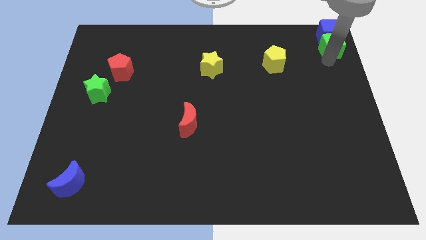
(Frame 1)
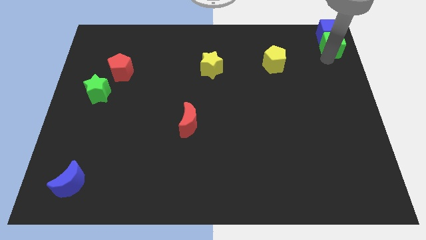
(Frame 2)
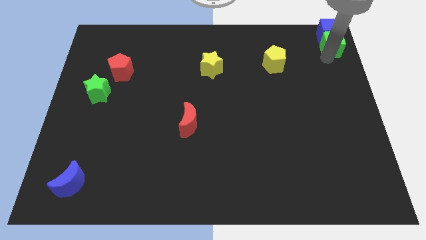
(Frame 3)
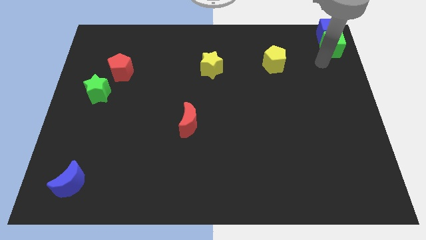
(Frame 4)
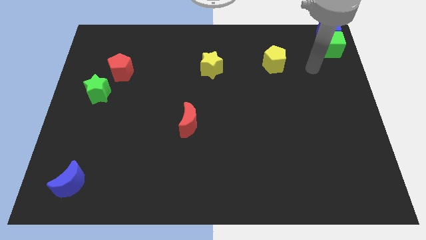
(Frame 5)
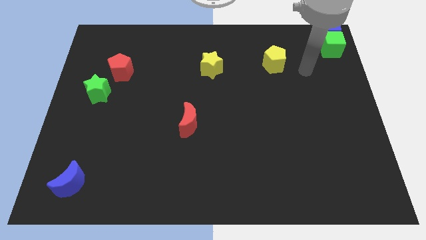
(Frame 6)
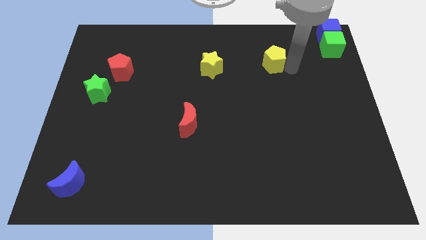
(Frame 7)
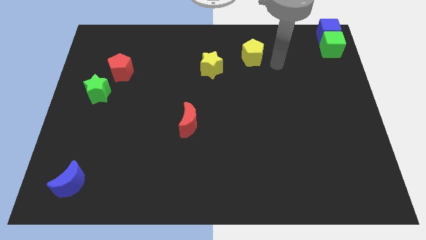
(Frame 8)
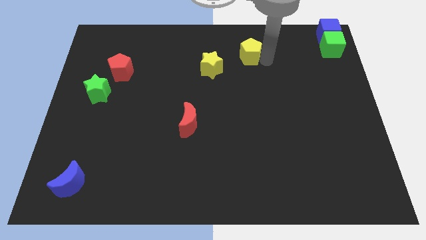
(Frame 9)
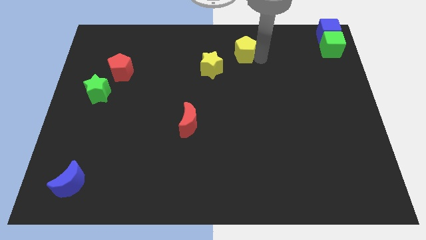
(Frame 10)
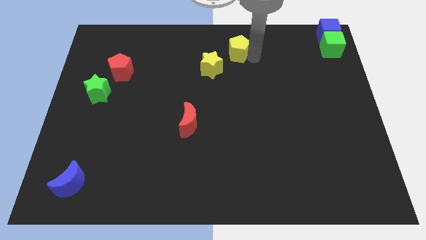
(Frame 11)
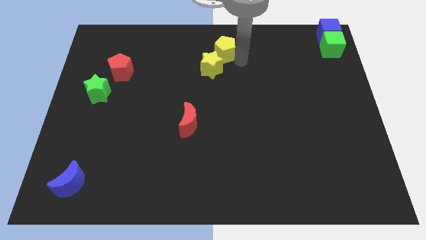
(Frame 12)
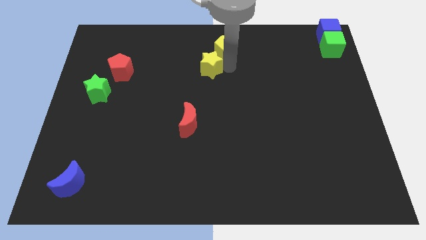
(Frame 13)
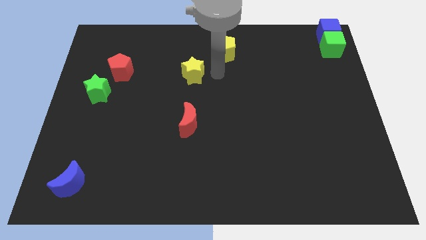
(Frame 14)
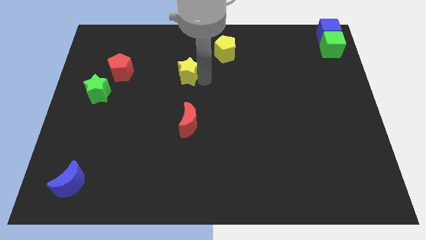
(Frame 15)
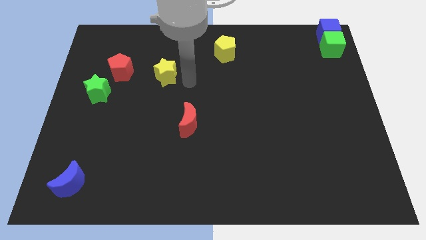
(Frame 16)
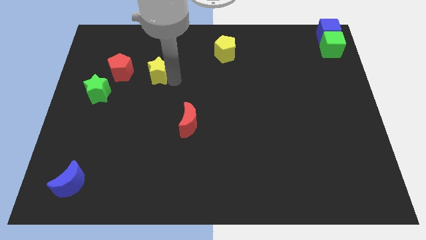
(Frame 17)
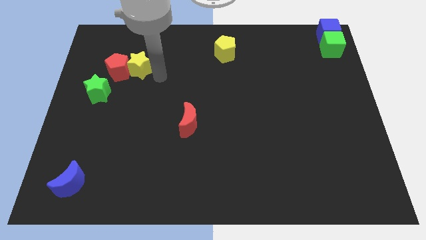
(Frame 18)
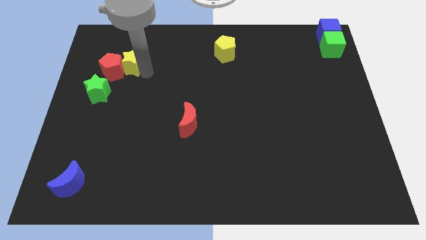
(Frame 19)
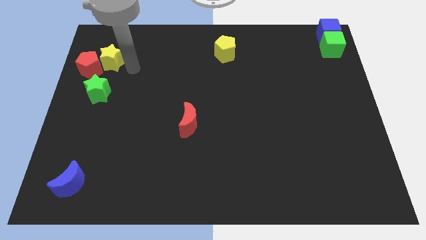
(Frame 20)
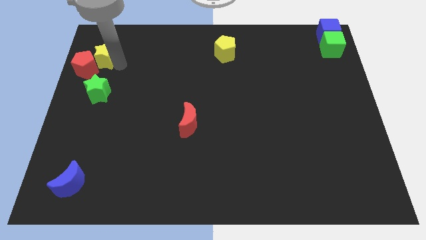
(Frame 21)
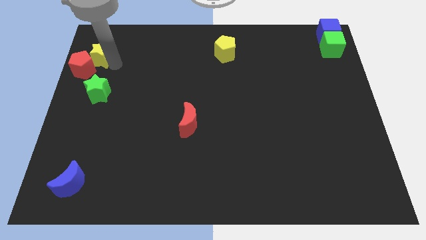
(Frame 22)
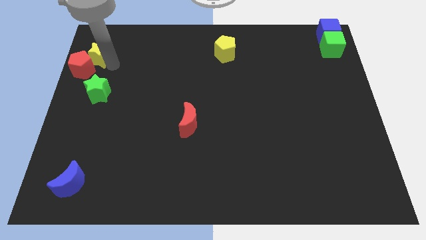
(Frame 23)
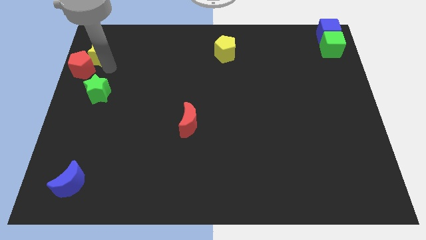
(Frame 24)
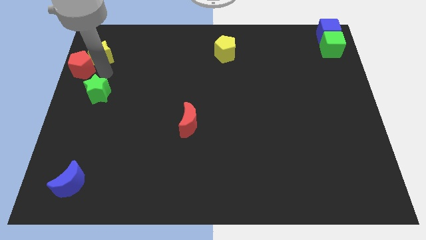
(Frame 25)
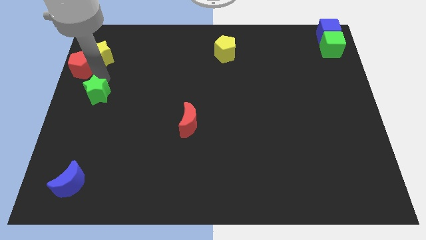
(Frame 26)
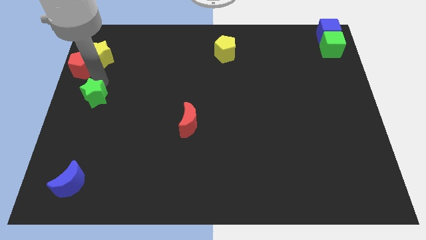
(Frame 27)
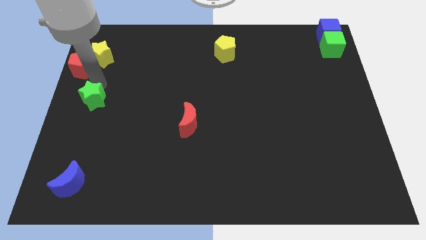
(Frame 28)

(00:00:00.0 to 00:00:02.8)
move the yellow star into the red pentagon

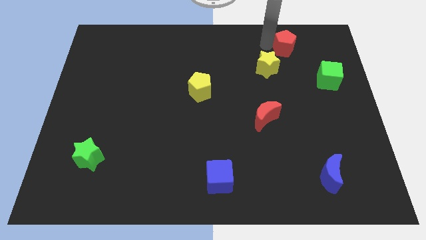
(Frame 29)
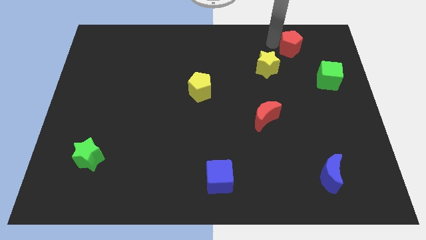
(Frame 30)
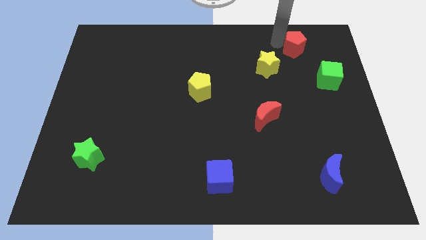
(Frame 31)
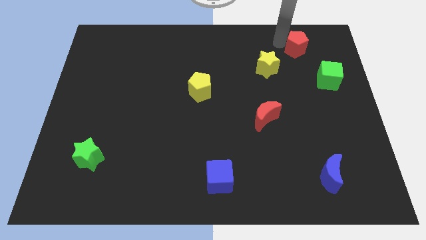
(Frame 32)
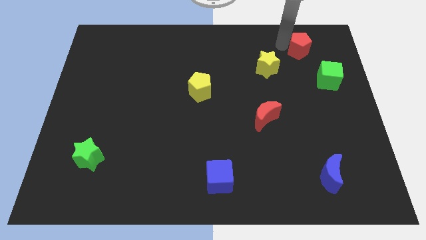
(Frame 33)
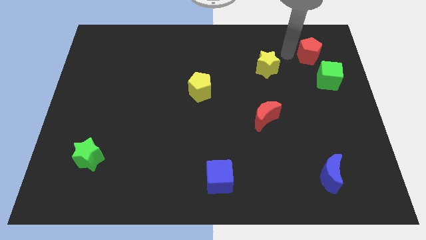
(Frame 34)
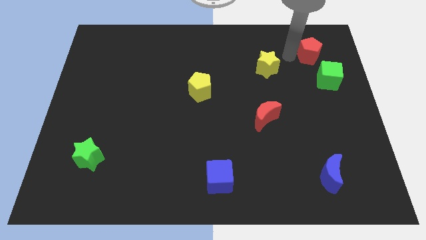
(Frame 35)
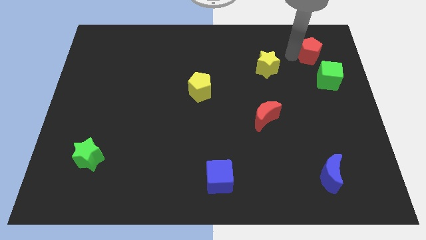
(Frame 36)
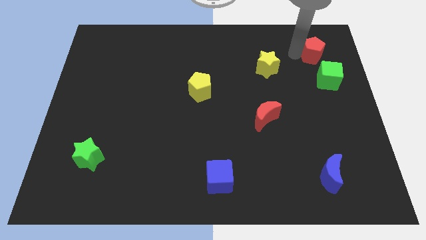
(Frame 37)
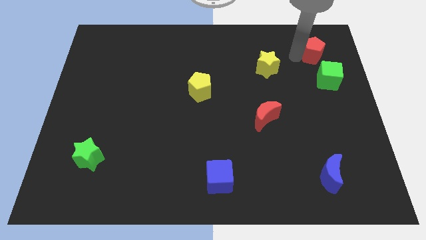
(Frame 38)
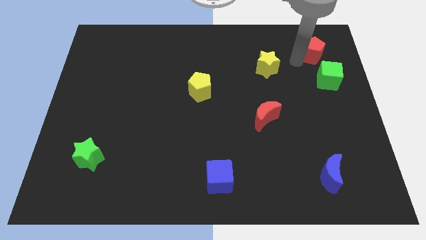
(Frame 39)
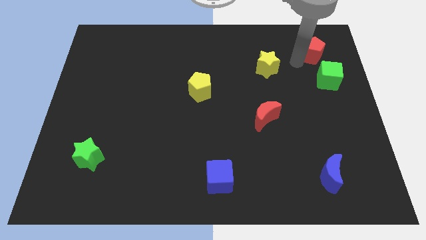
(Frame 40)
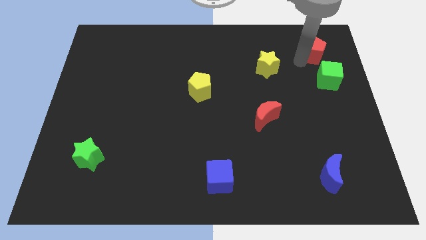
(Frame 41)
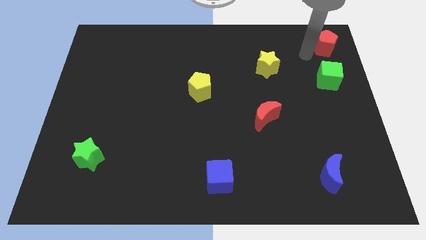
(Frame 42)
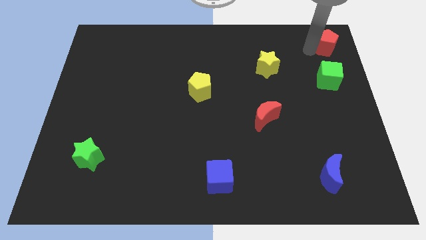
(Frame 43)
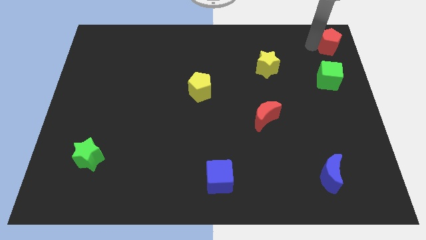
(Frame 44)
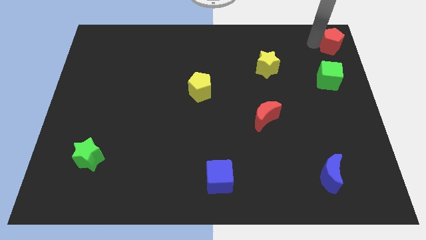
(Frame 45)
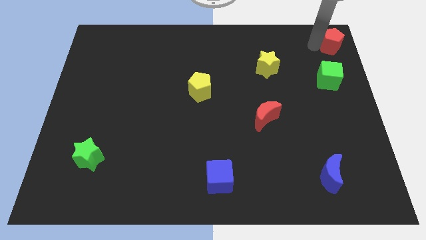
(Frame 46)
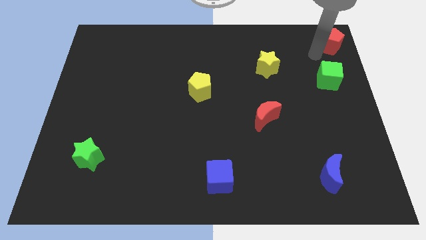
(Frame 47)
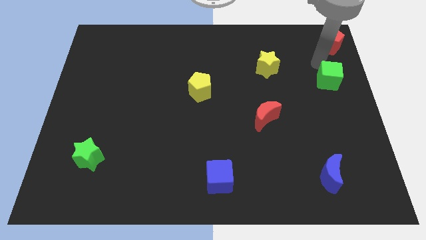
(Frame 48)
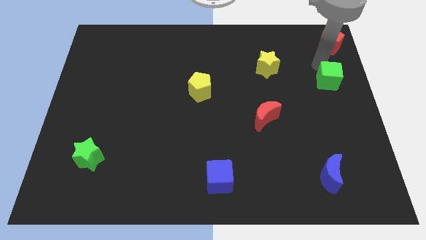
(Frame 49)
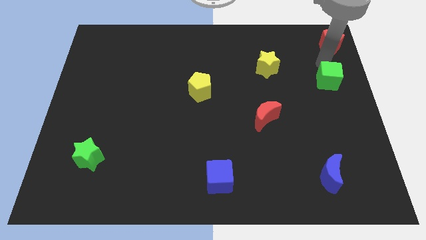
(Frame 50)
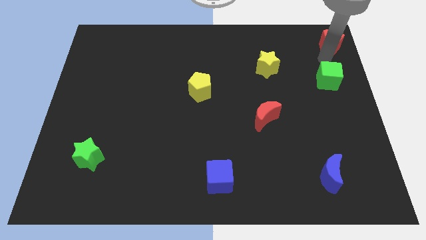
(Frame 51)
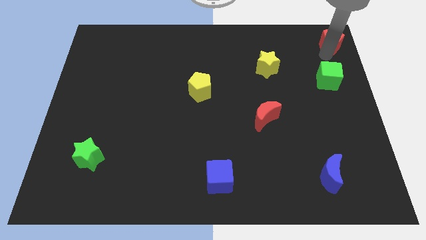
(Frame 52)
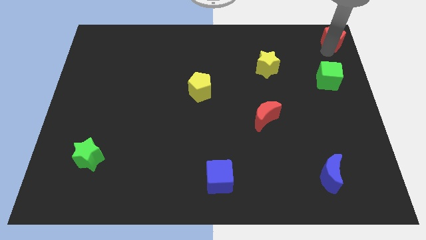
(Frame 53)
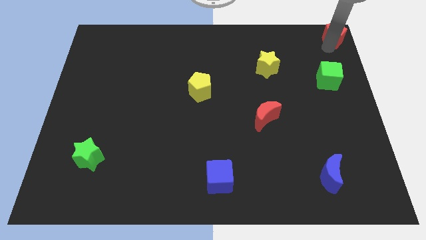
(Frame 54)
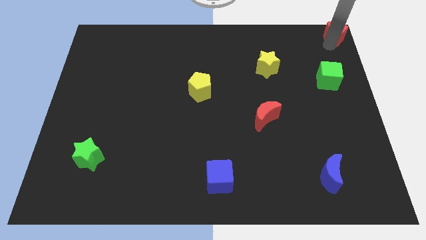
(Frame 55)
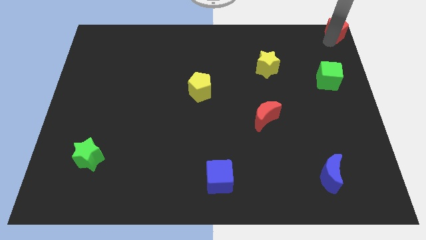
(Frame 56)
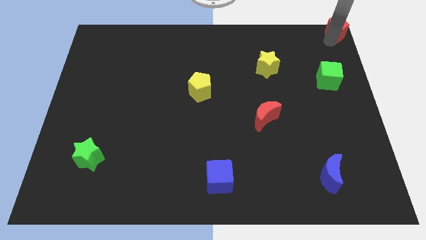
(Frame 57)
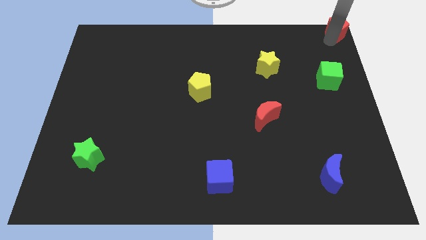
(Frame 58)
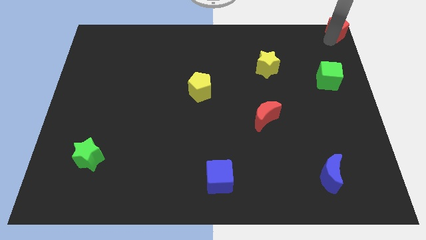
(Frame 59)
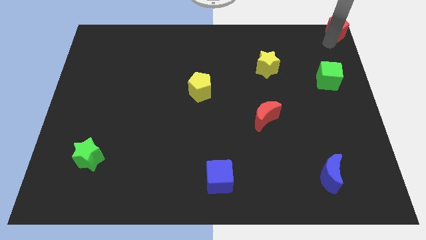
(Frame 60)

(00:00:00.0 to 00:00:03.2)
place red pentagon slightly towards right corner

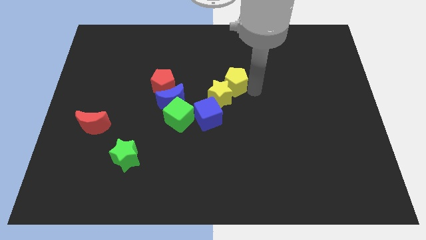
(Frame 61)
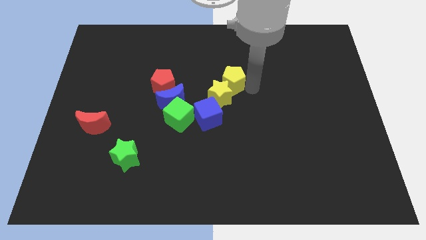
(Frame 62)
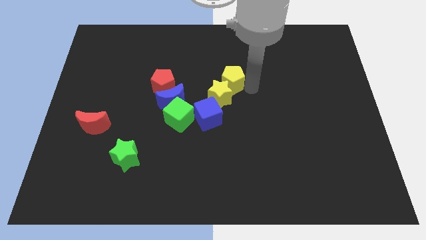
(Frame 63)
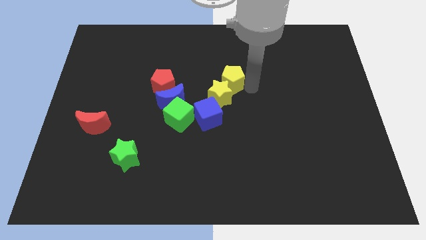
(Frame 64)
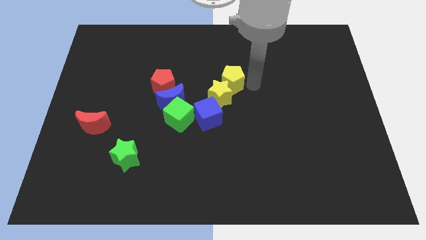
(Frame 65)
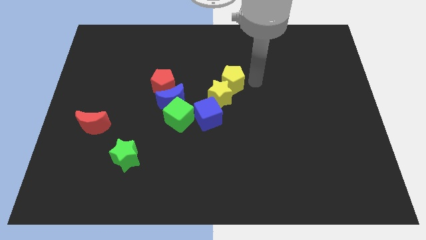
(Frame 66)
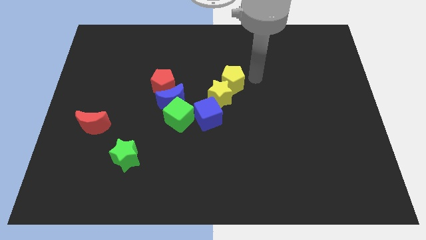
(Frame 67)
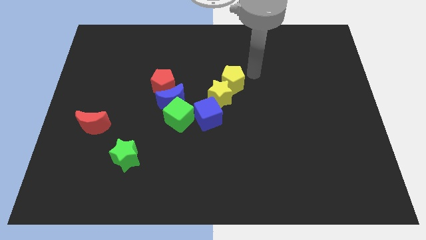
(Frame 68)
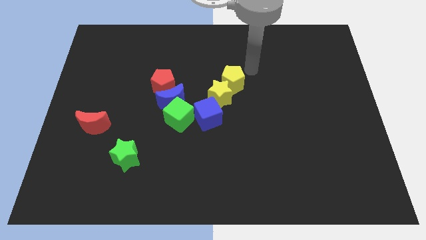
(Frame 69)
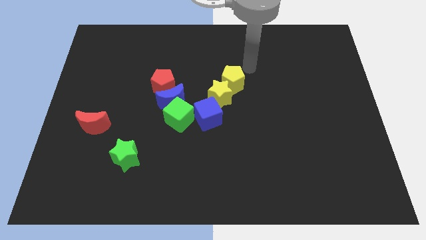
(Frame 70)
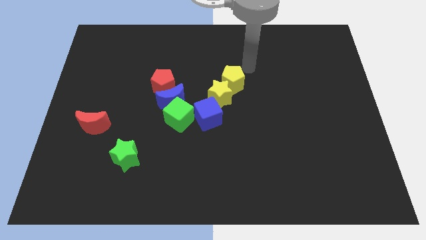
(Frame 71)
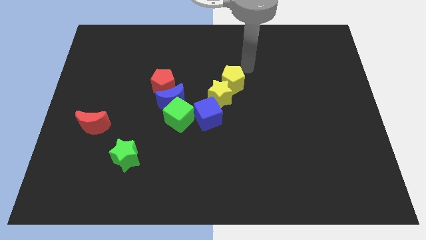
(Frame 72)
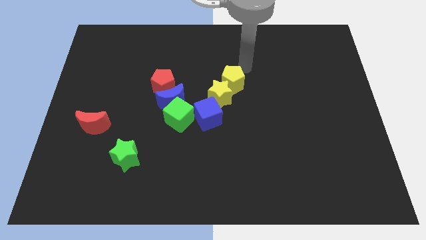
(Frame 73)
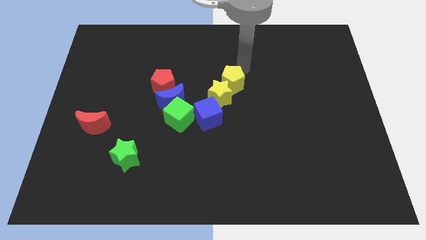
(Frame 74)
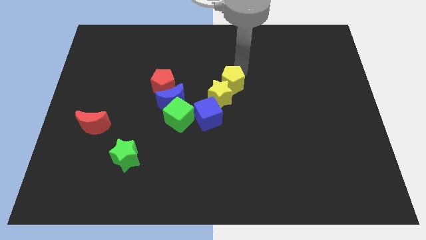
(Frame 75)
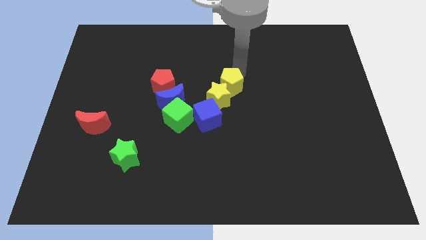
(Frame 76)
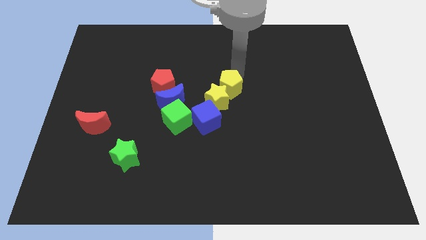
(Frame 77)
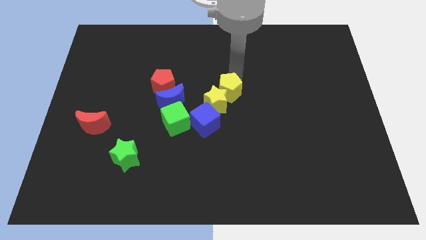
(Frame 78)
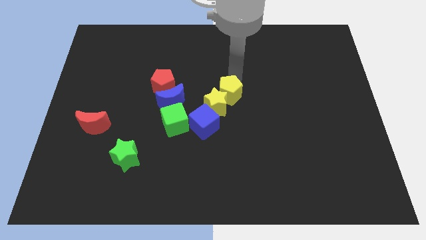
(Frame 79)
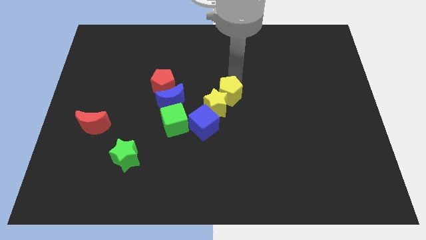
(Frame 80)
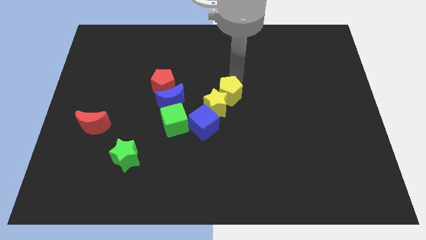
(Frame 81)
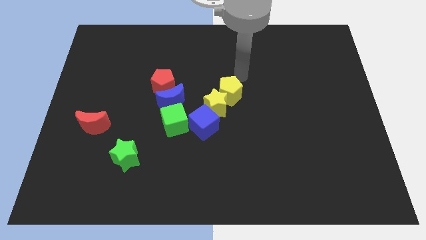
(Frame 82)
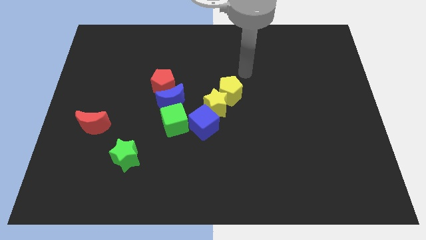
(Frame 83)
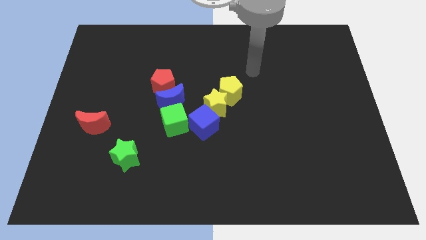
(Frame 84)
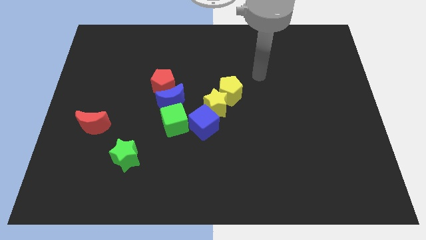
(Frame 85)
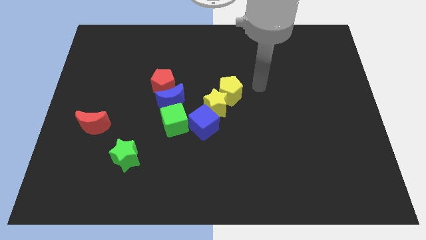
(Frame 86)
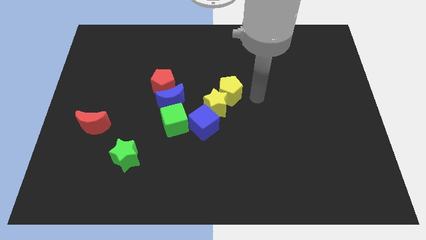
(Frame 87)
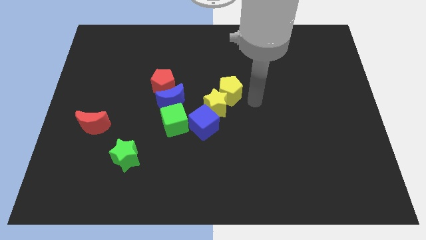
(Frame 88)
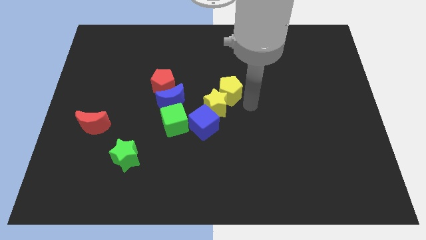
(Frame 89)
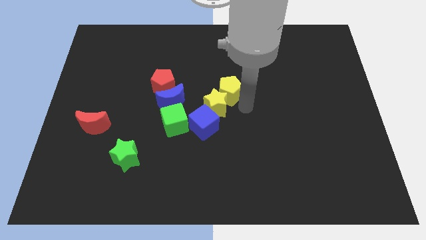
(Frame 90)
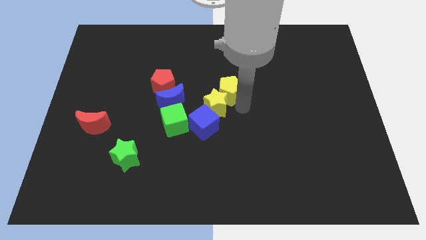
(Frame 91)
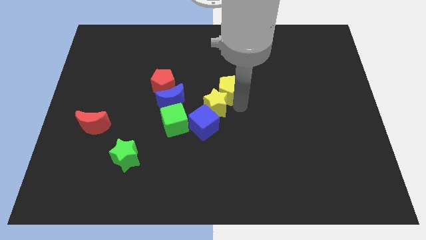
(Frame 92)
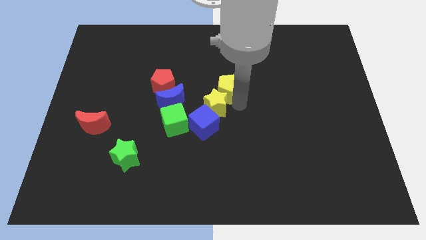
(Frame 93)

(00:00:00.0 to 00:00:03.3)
push the group of blocks slightly downwards
